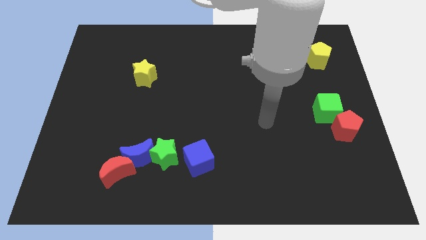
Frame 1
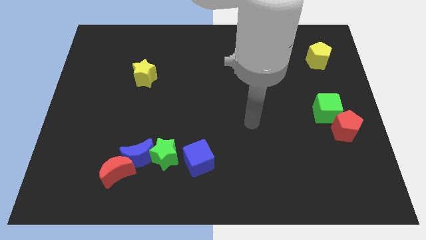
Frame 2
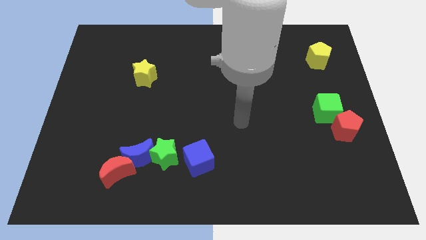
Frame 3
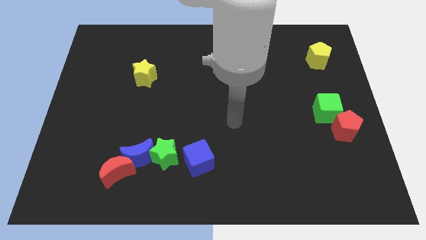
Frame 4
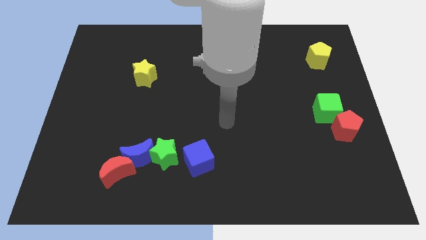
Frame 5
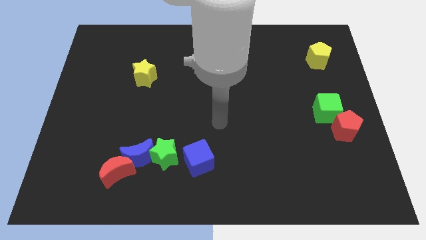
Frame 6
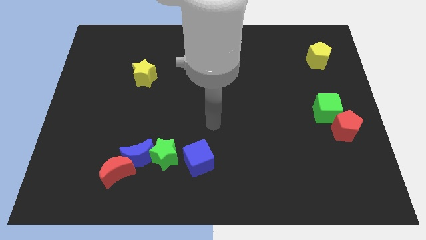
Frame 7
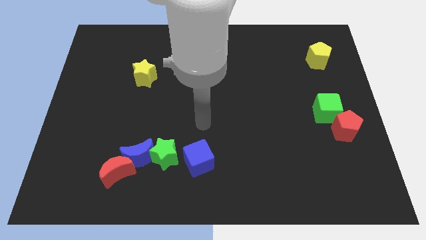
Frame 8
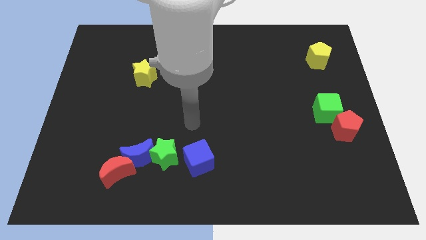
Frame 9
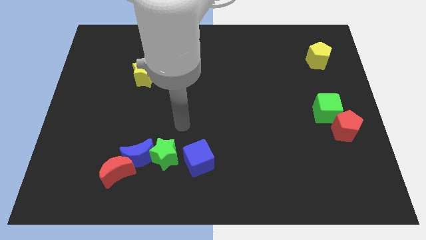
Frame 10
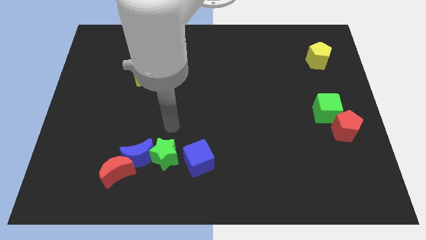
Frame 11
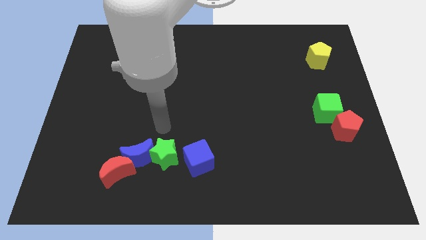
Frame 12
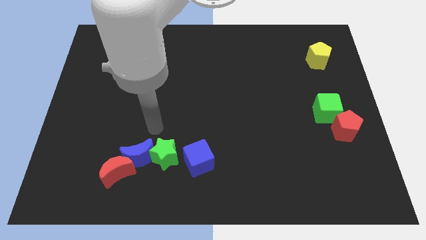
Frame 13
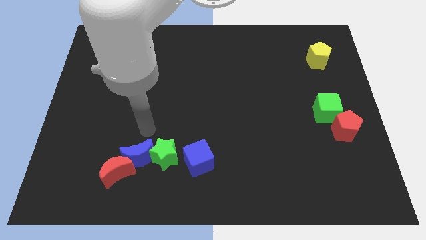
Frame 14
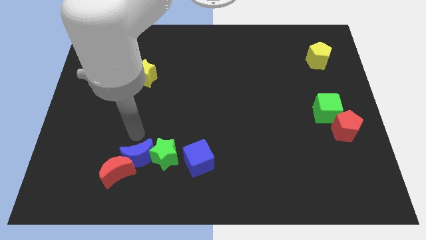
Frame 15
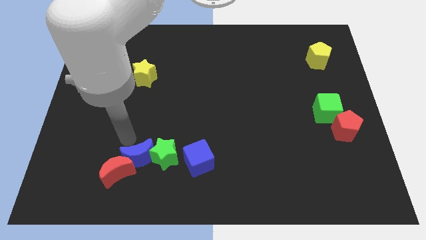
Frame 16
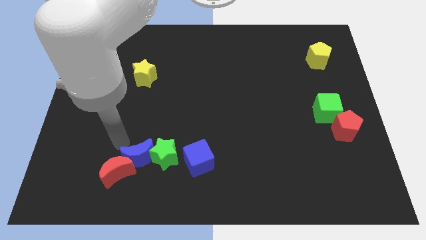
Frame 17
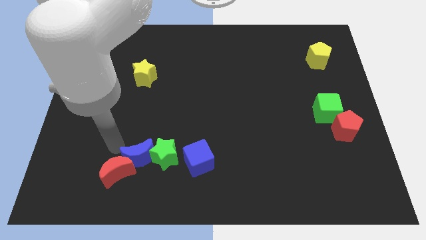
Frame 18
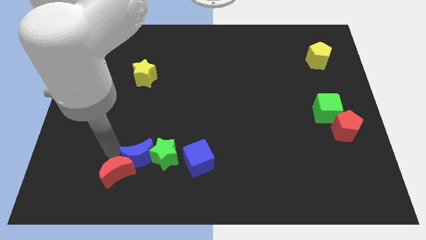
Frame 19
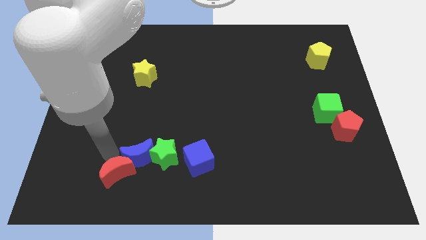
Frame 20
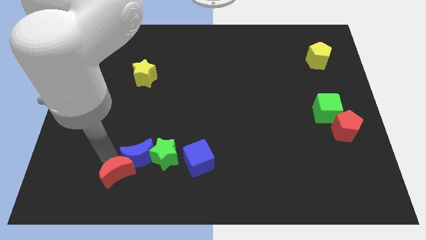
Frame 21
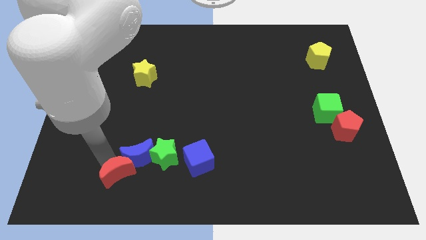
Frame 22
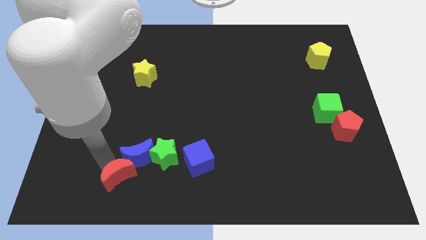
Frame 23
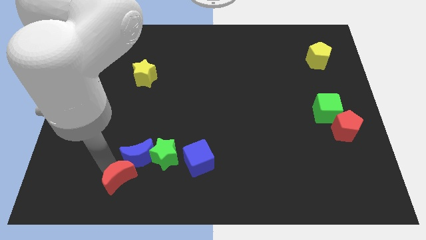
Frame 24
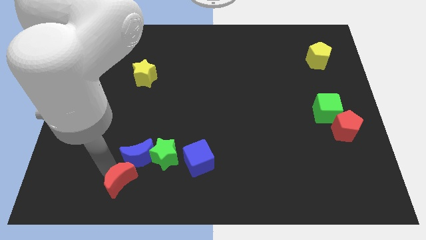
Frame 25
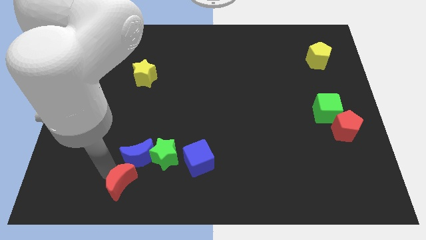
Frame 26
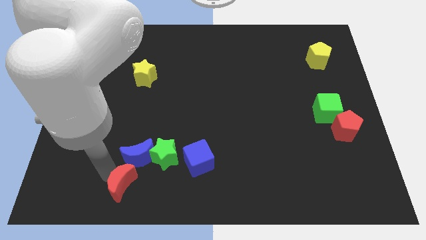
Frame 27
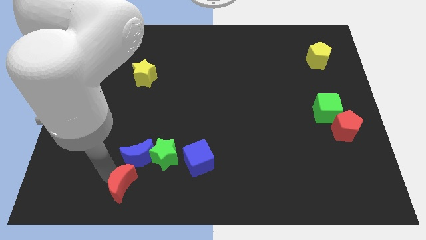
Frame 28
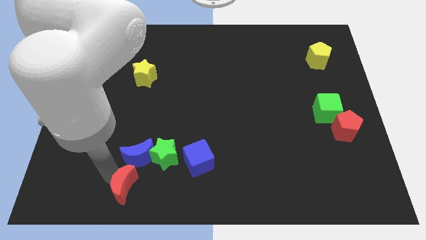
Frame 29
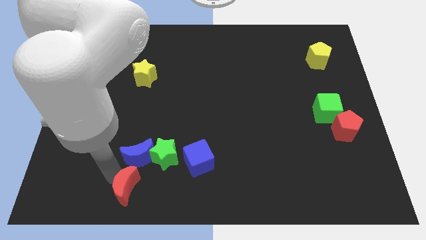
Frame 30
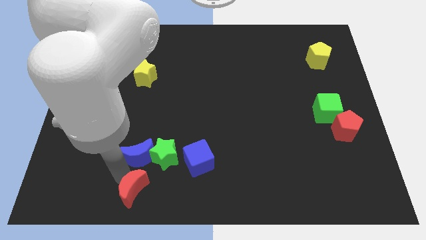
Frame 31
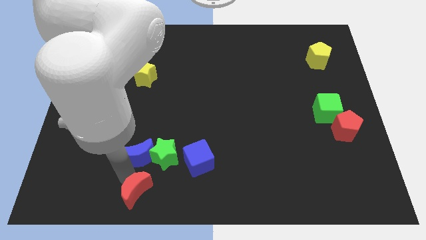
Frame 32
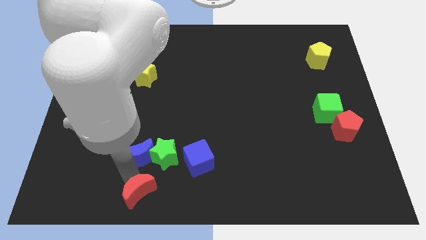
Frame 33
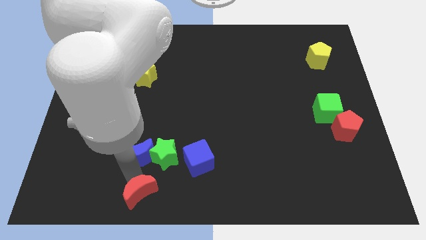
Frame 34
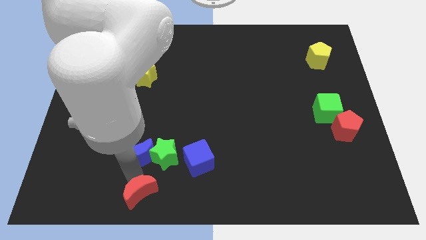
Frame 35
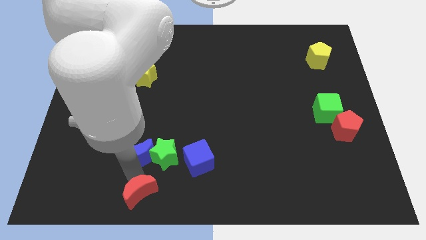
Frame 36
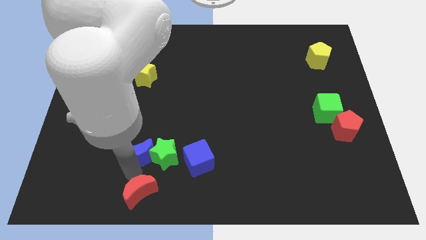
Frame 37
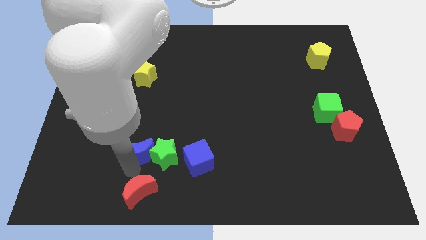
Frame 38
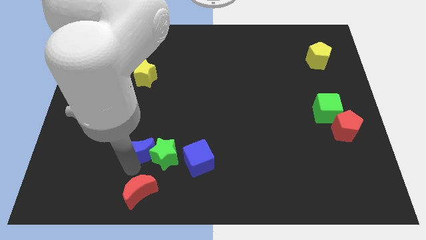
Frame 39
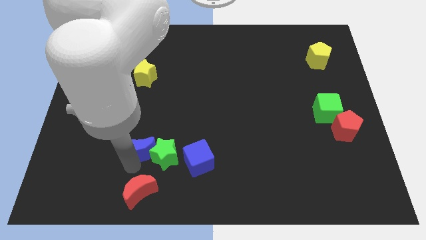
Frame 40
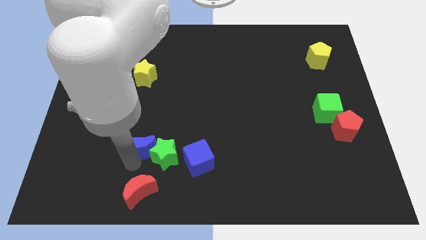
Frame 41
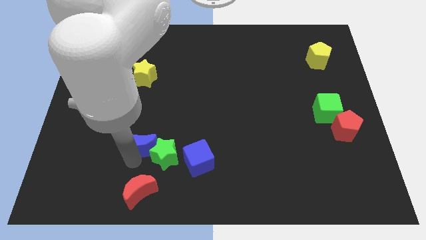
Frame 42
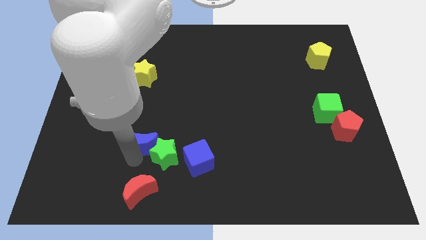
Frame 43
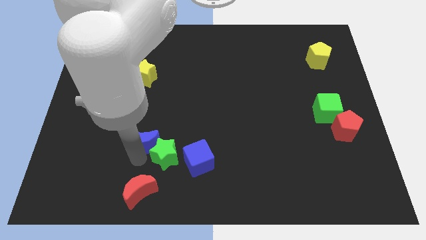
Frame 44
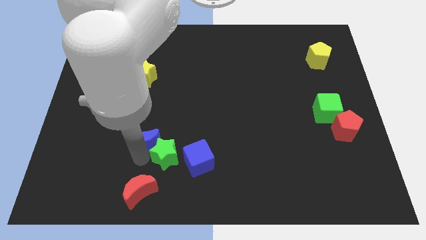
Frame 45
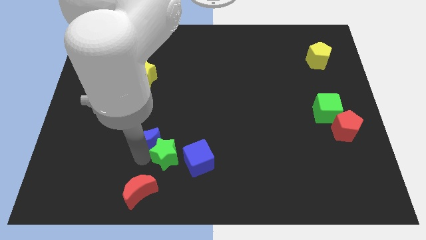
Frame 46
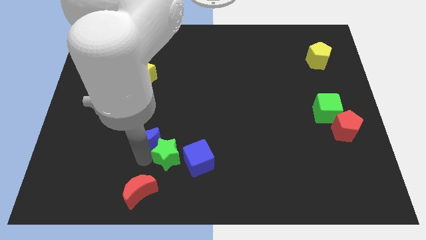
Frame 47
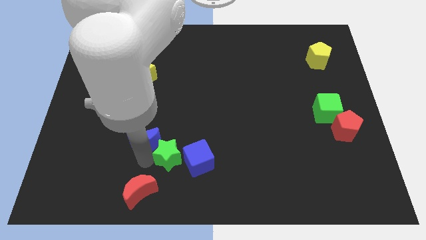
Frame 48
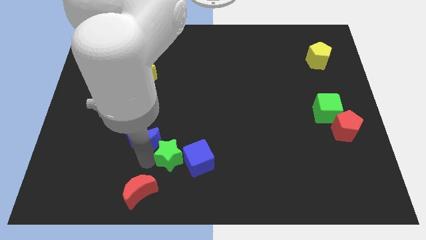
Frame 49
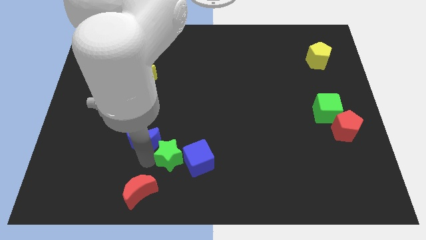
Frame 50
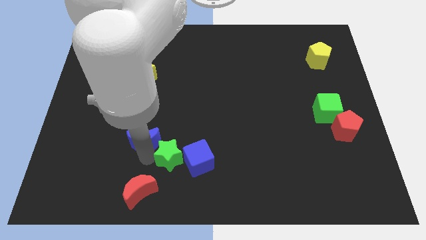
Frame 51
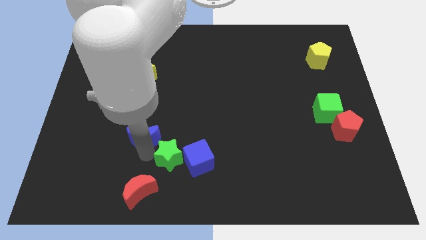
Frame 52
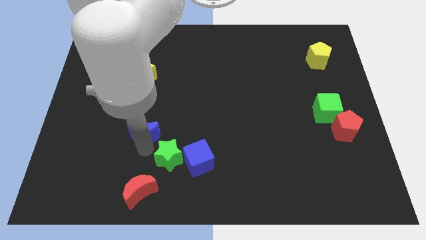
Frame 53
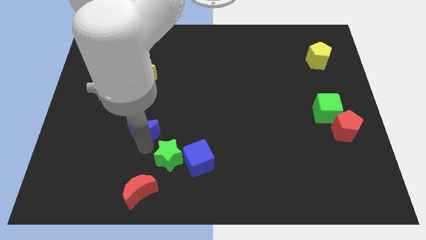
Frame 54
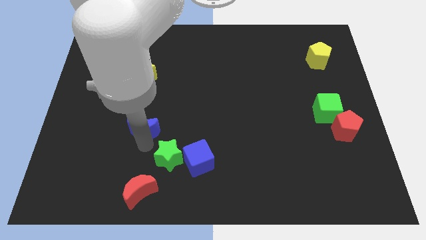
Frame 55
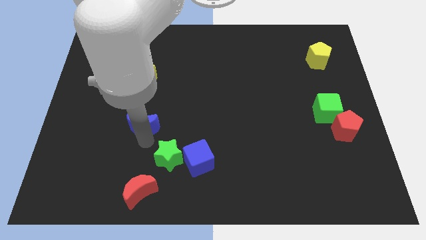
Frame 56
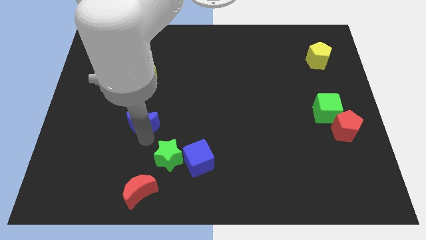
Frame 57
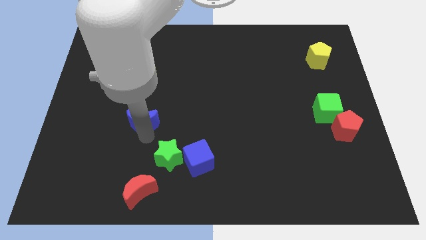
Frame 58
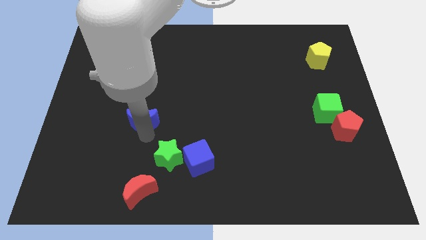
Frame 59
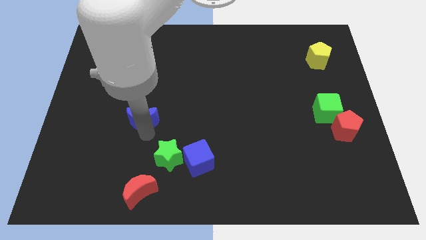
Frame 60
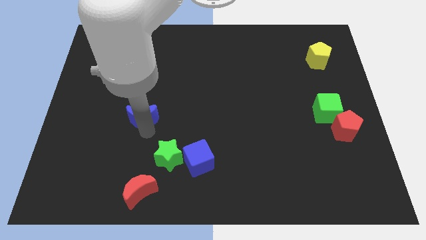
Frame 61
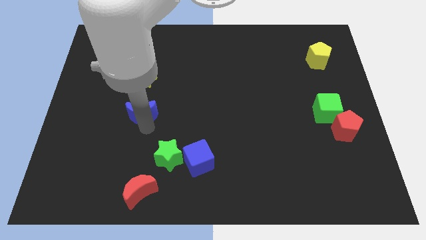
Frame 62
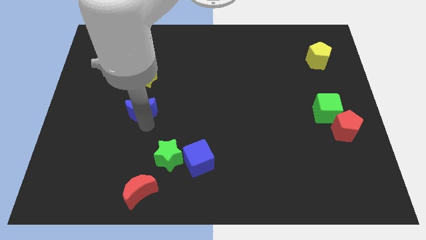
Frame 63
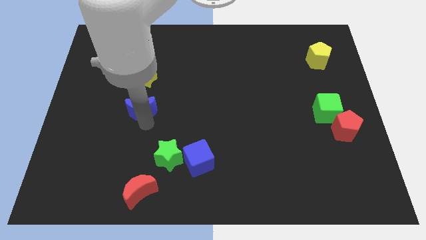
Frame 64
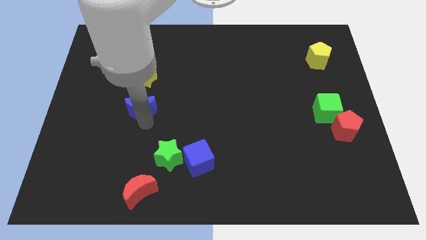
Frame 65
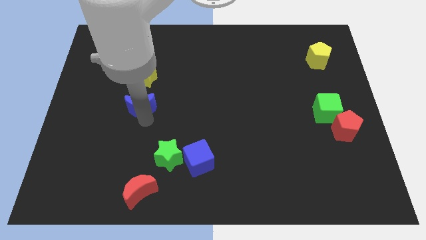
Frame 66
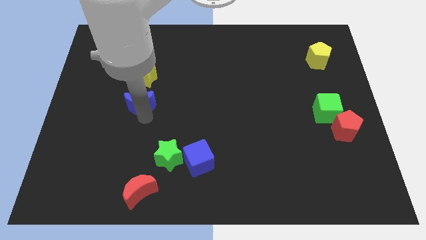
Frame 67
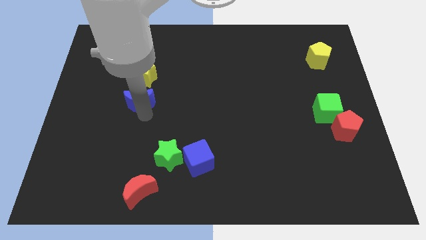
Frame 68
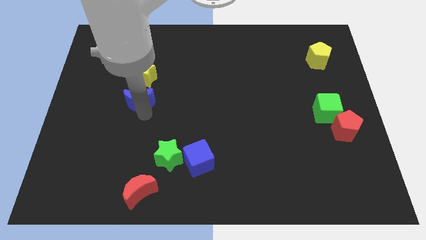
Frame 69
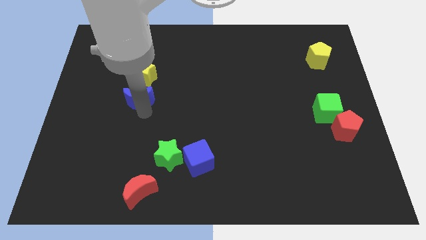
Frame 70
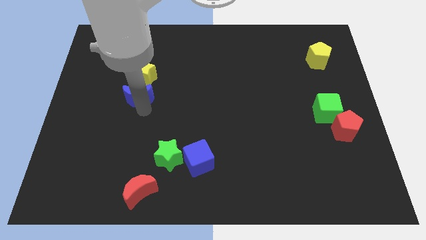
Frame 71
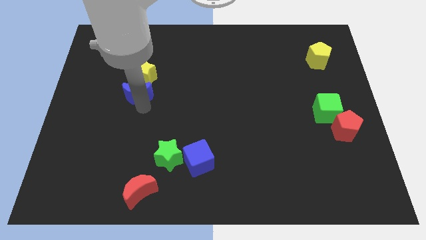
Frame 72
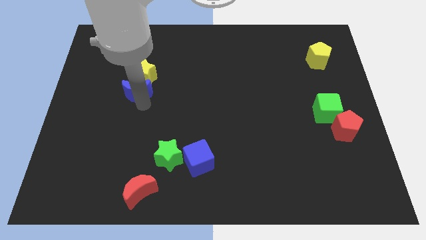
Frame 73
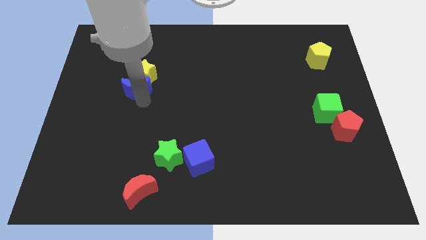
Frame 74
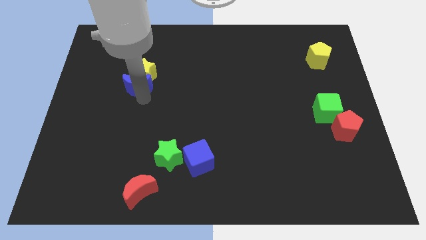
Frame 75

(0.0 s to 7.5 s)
put the blue moon close to the yellow star

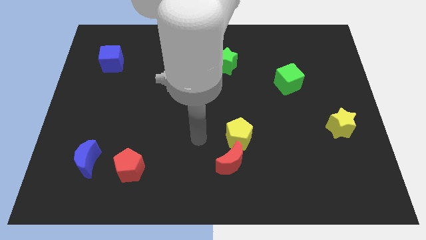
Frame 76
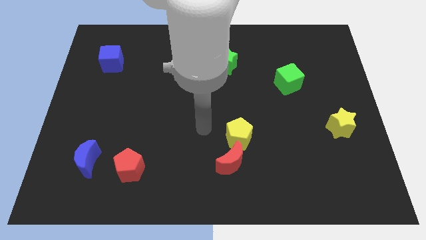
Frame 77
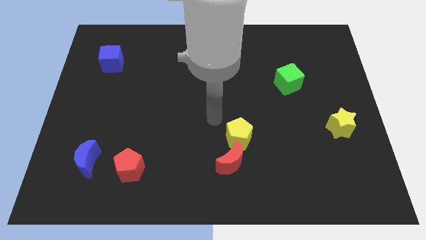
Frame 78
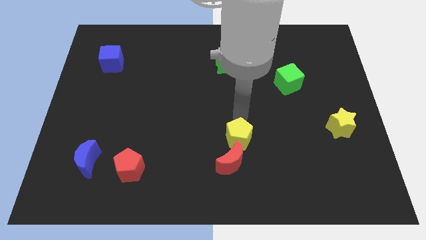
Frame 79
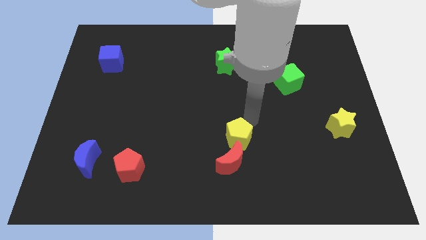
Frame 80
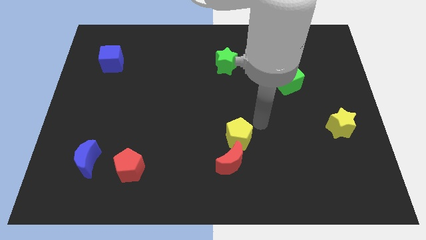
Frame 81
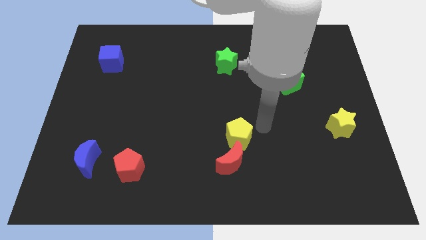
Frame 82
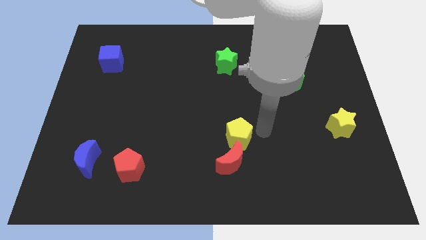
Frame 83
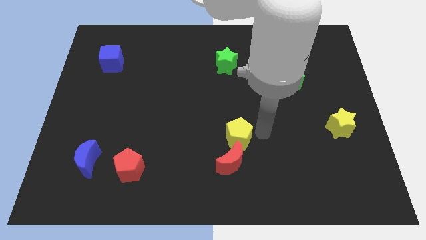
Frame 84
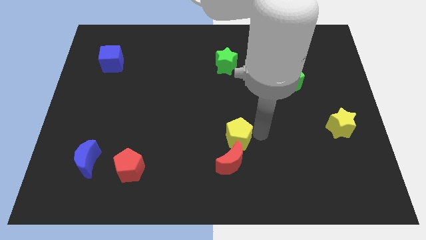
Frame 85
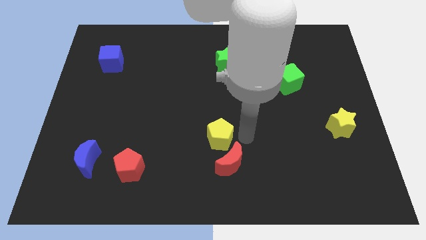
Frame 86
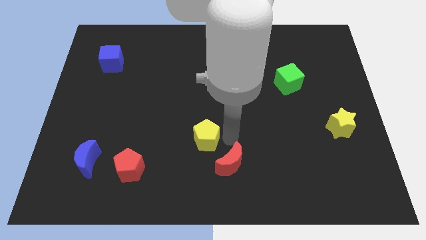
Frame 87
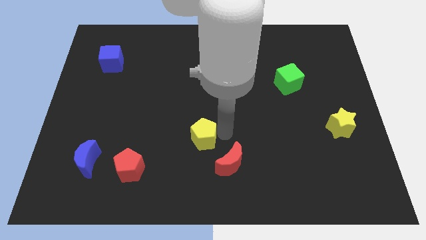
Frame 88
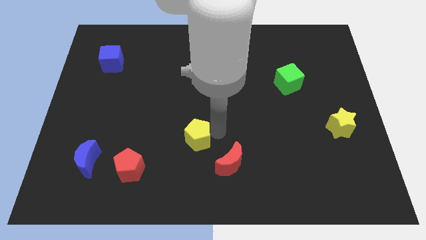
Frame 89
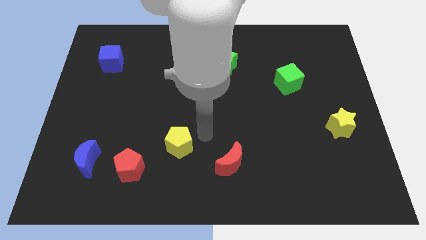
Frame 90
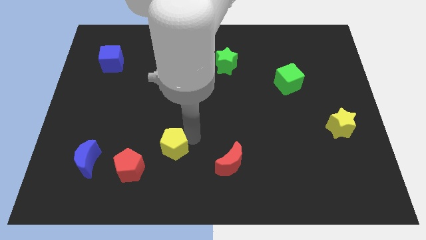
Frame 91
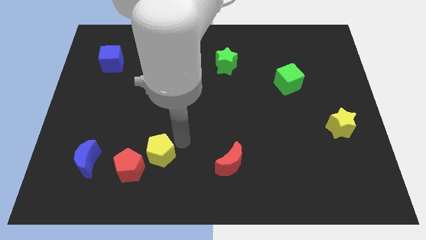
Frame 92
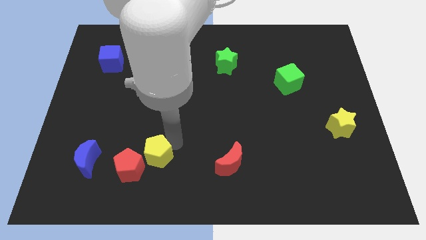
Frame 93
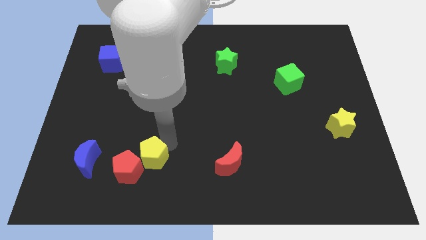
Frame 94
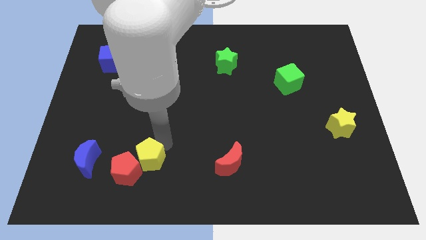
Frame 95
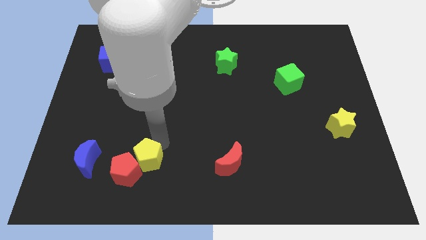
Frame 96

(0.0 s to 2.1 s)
slide the yellow pentagon next to the red pentagon
